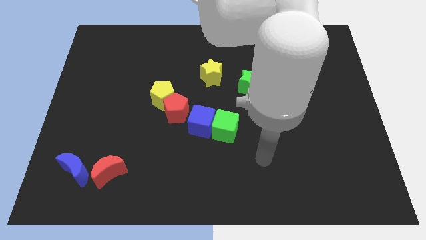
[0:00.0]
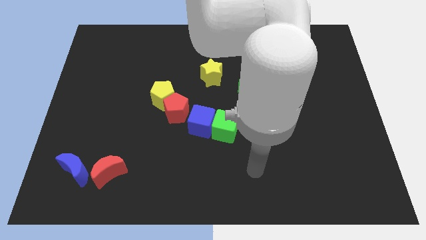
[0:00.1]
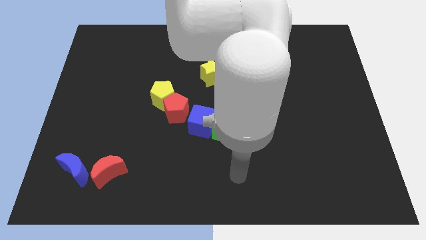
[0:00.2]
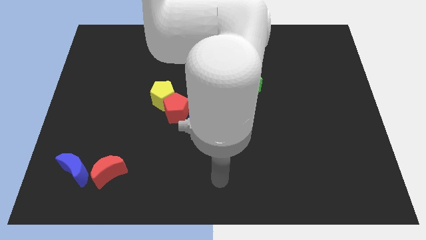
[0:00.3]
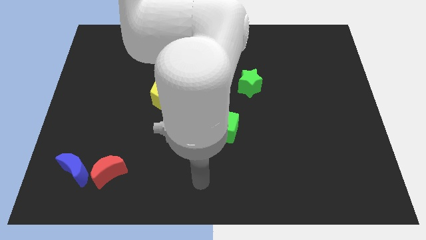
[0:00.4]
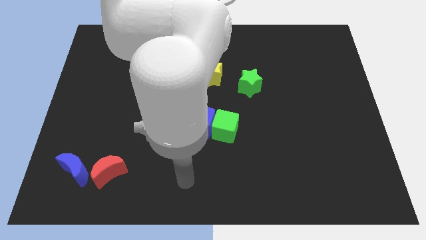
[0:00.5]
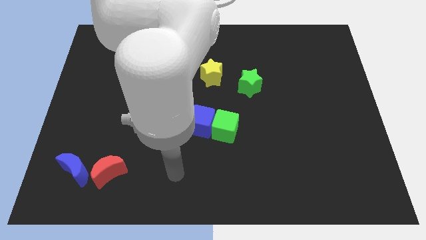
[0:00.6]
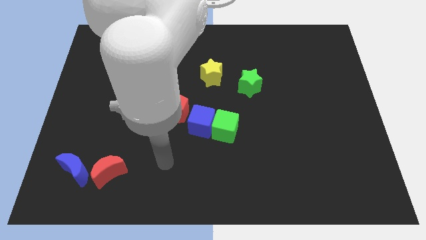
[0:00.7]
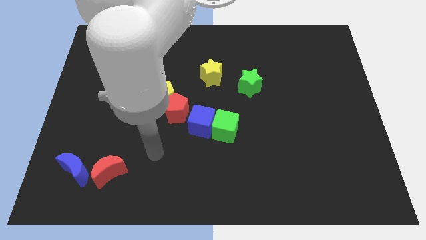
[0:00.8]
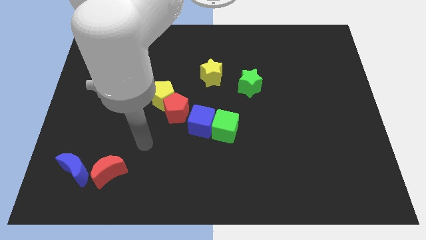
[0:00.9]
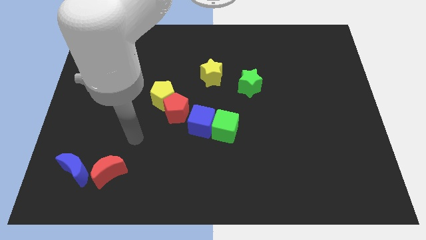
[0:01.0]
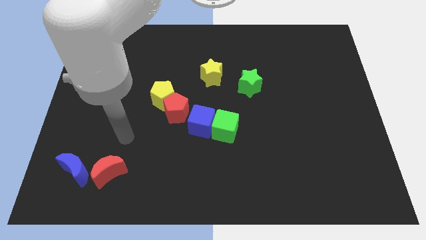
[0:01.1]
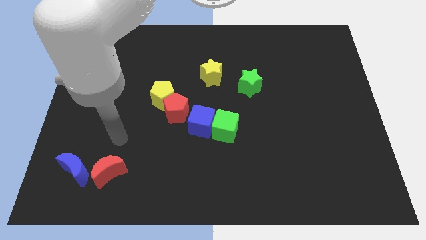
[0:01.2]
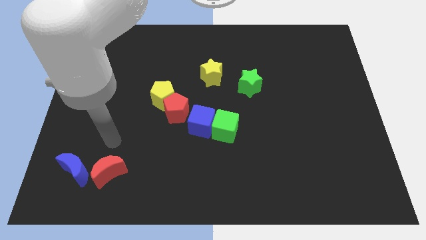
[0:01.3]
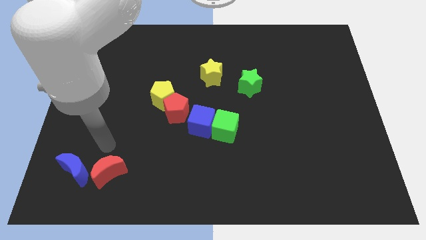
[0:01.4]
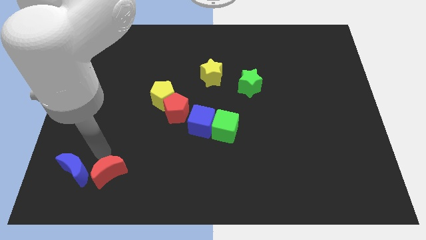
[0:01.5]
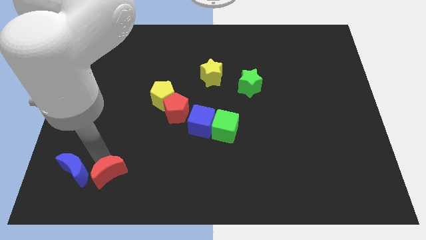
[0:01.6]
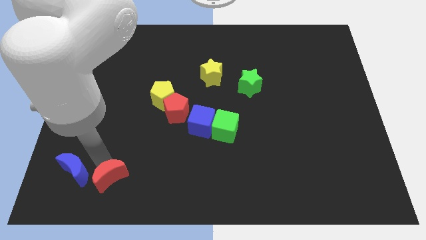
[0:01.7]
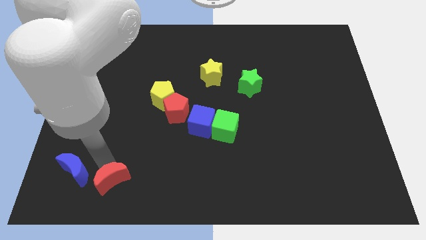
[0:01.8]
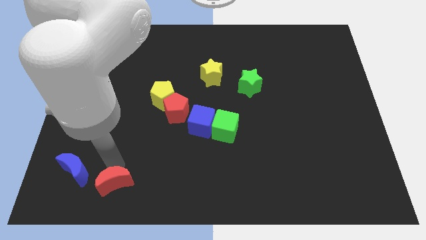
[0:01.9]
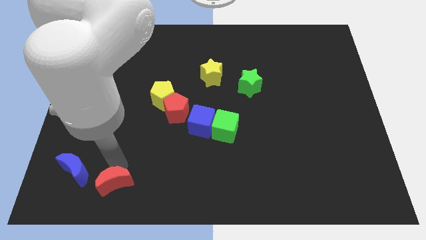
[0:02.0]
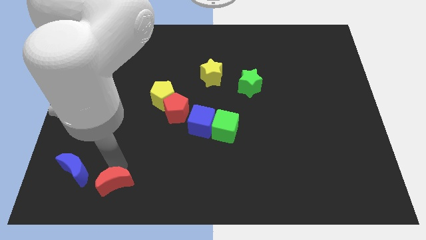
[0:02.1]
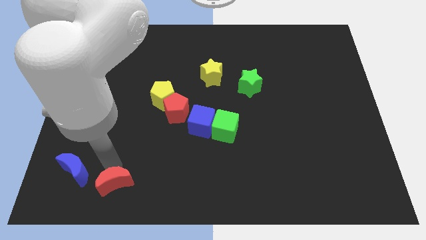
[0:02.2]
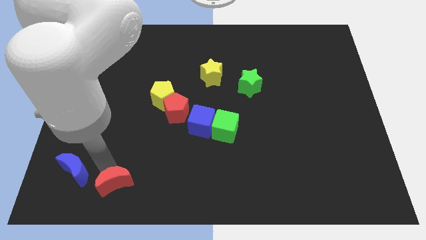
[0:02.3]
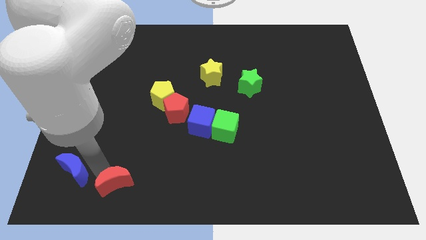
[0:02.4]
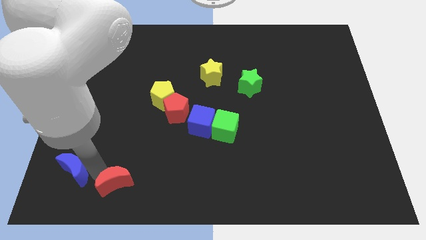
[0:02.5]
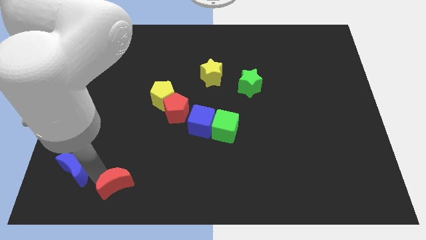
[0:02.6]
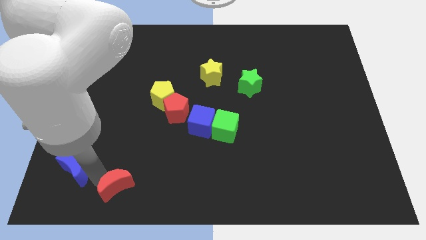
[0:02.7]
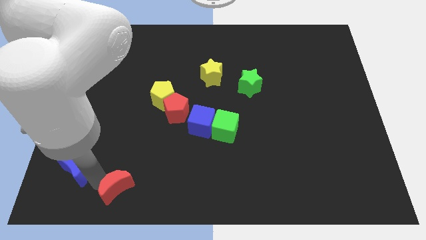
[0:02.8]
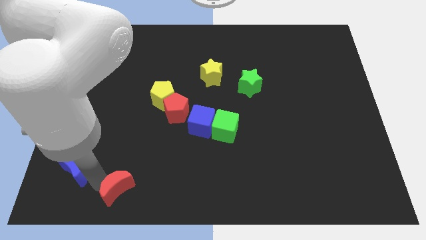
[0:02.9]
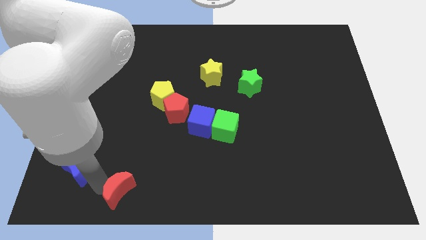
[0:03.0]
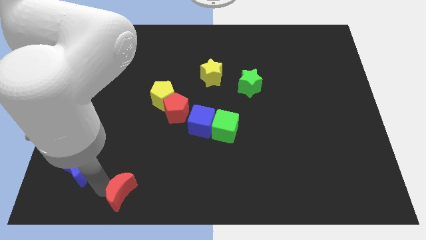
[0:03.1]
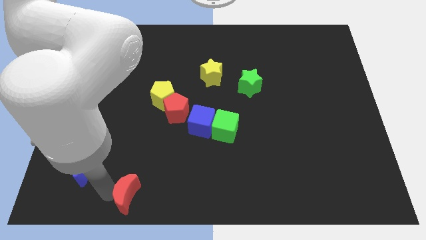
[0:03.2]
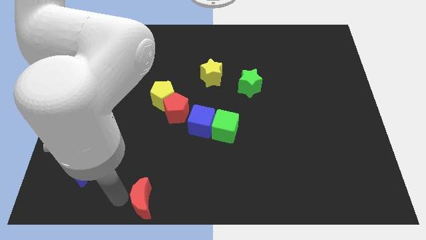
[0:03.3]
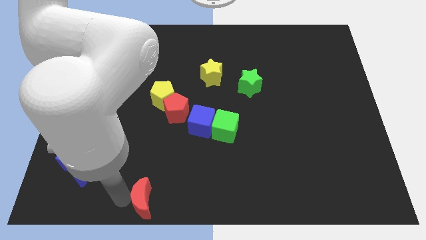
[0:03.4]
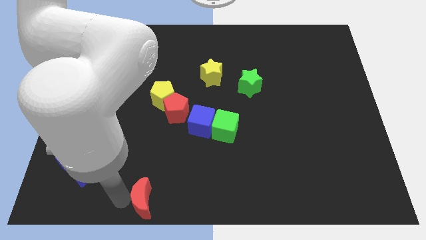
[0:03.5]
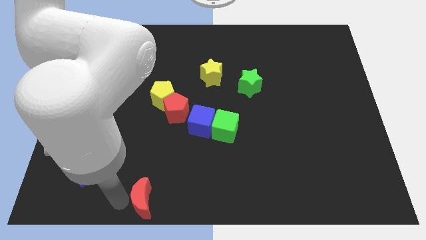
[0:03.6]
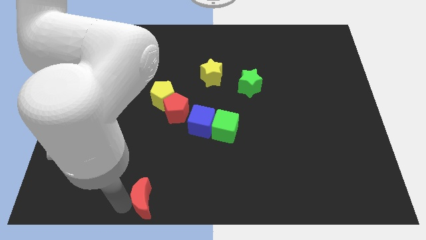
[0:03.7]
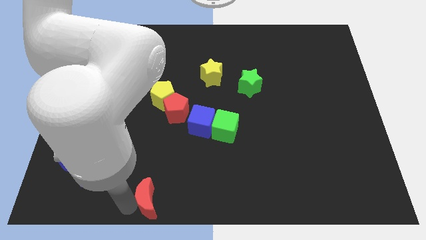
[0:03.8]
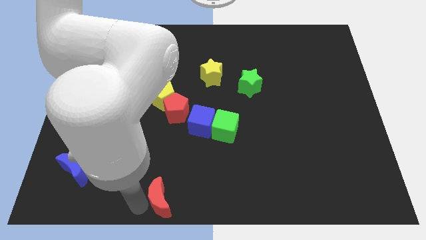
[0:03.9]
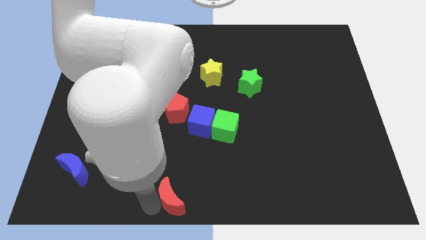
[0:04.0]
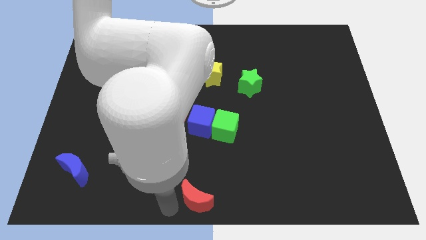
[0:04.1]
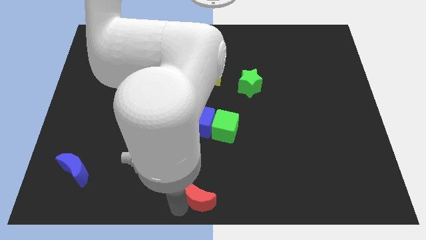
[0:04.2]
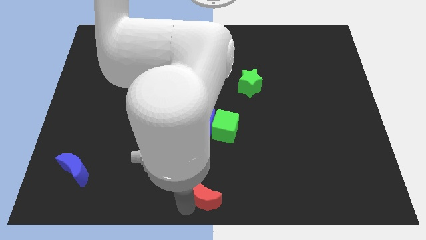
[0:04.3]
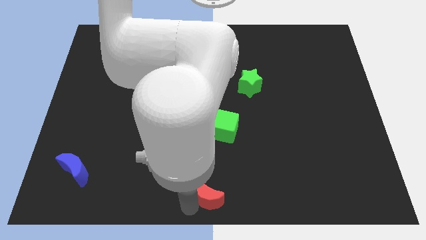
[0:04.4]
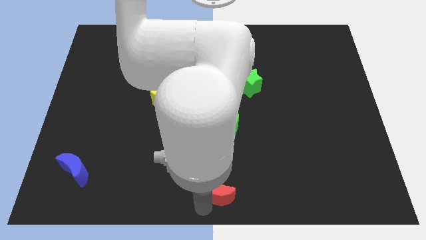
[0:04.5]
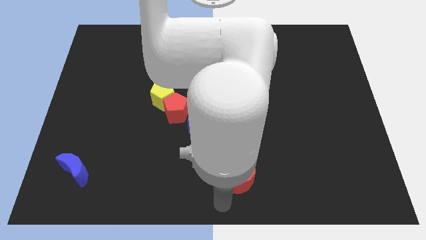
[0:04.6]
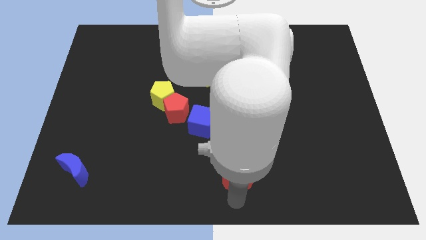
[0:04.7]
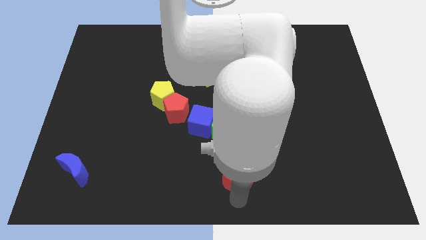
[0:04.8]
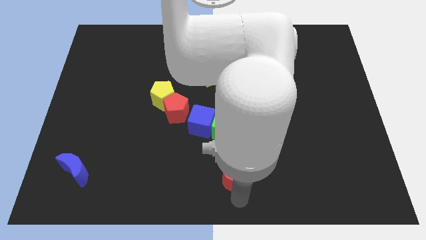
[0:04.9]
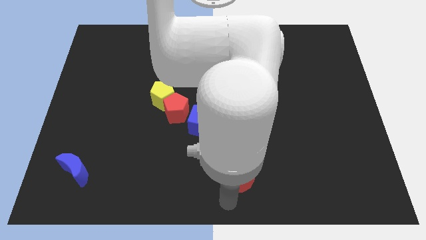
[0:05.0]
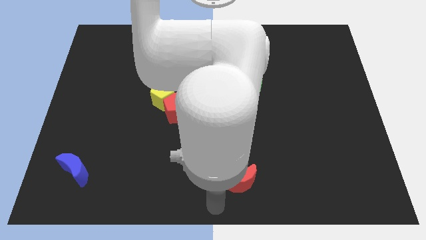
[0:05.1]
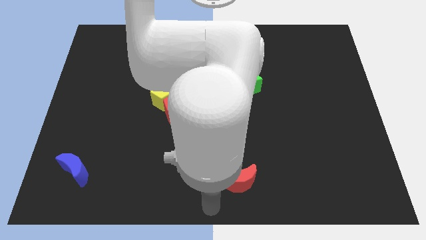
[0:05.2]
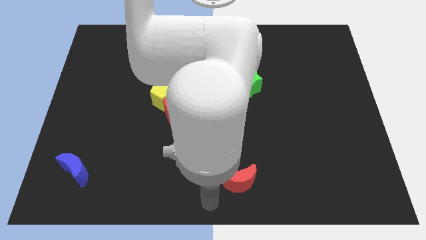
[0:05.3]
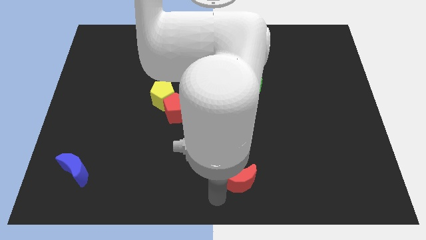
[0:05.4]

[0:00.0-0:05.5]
separate the red moon from the blue moon

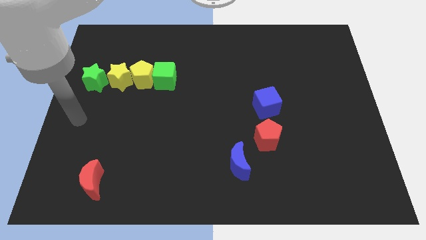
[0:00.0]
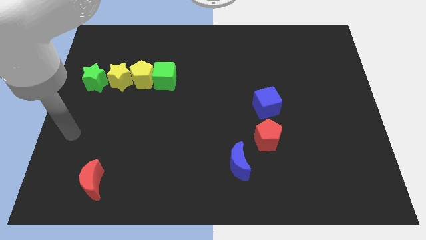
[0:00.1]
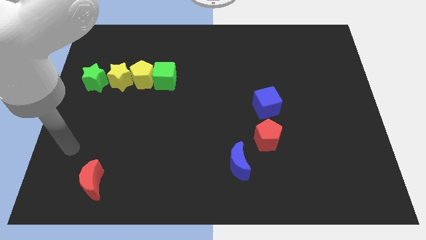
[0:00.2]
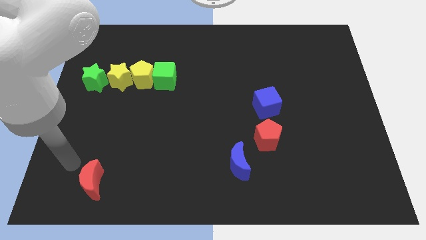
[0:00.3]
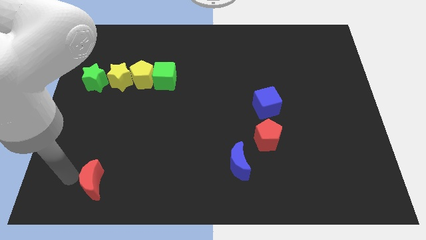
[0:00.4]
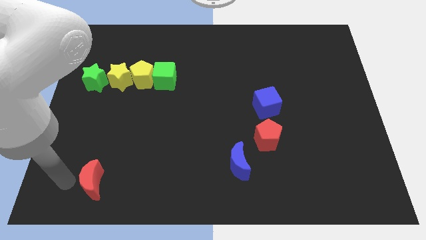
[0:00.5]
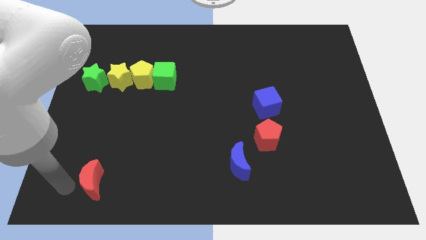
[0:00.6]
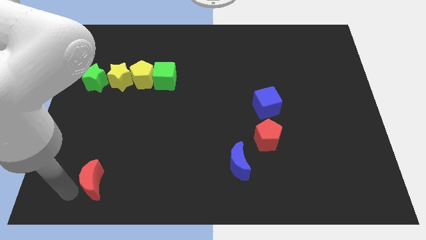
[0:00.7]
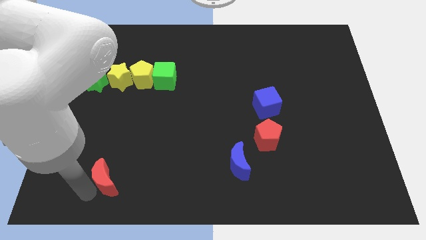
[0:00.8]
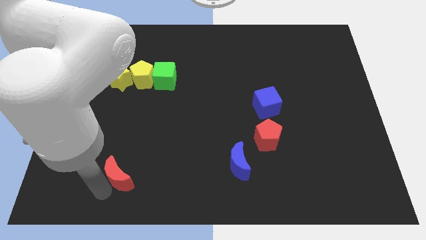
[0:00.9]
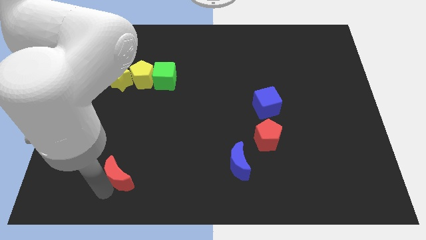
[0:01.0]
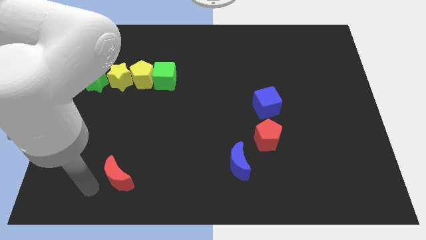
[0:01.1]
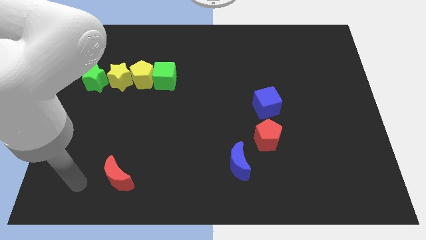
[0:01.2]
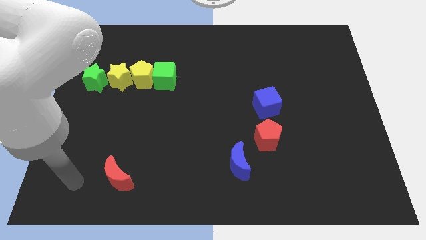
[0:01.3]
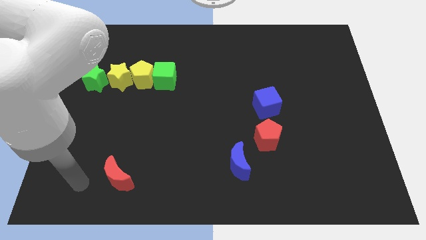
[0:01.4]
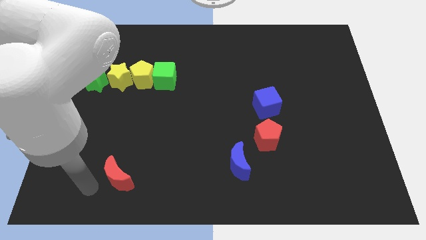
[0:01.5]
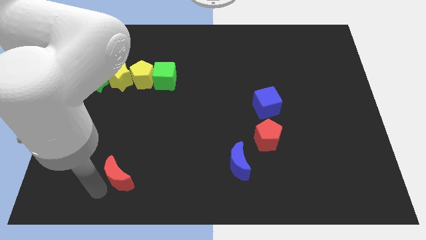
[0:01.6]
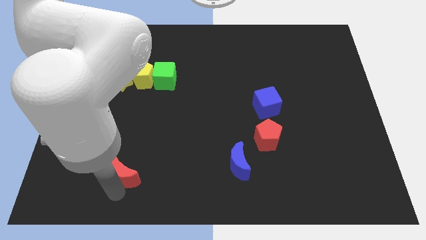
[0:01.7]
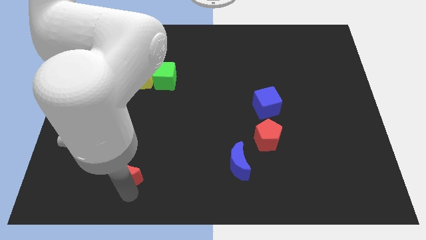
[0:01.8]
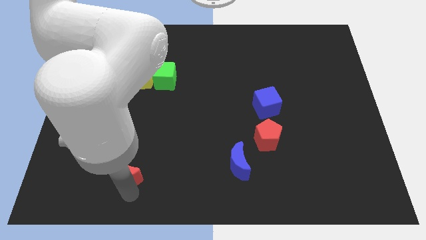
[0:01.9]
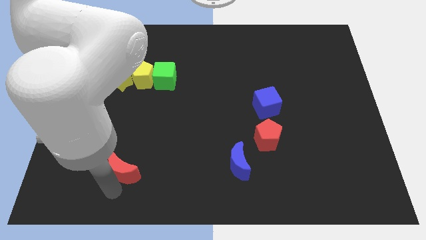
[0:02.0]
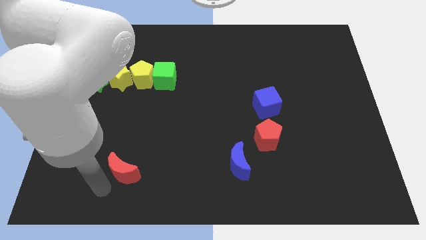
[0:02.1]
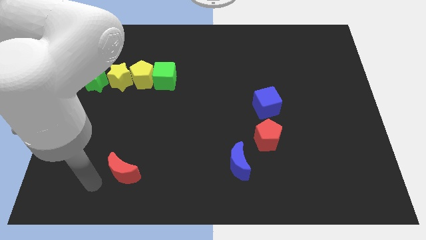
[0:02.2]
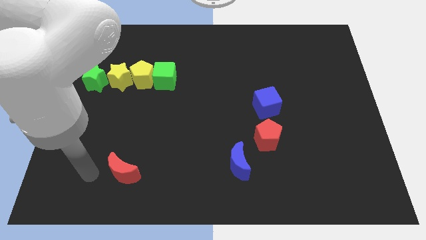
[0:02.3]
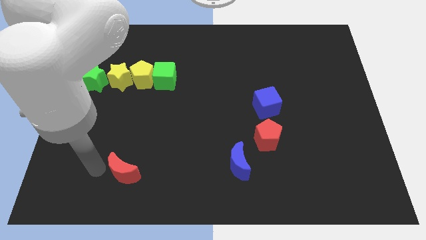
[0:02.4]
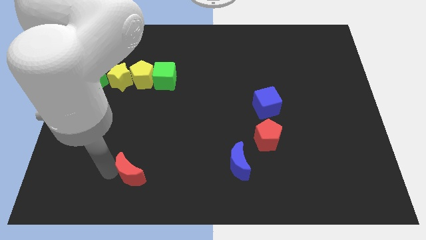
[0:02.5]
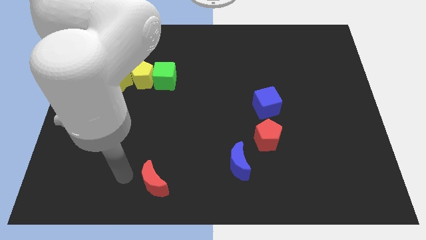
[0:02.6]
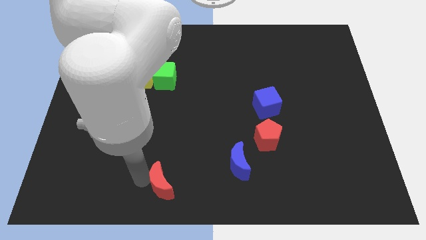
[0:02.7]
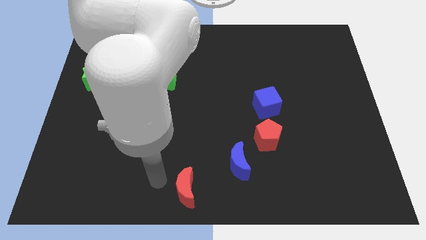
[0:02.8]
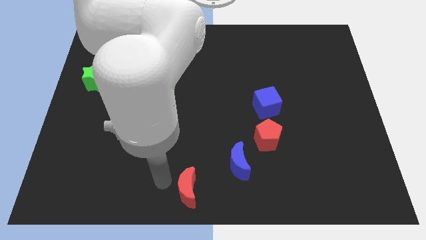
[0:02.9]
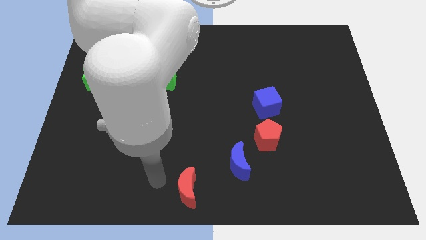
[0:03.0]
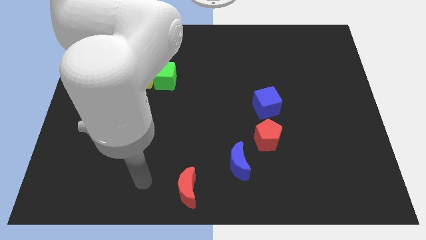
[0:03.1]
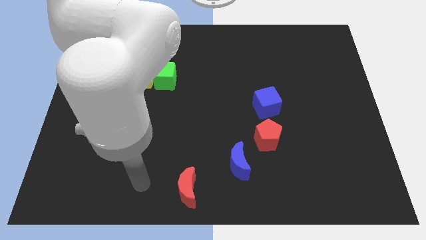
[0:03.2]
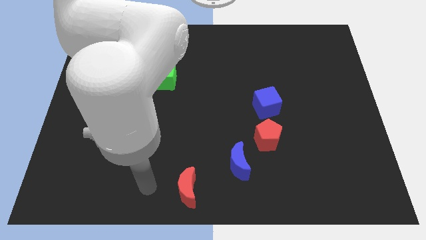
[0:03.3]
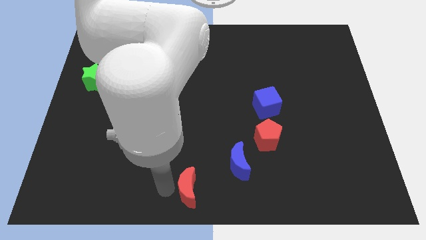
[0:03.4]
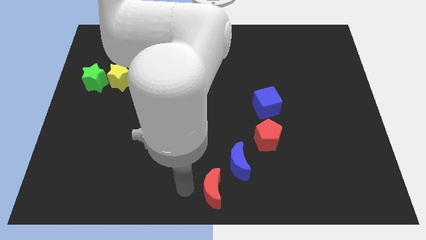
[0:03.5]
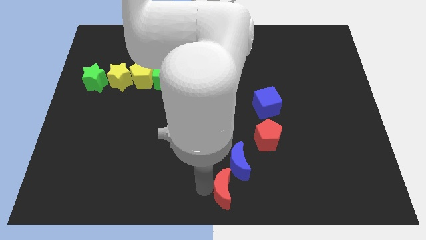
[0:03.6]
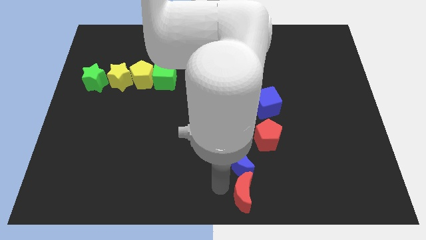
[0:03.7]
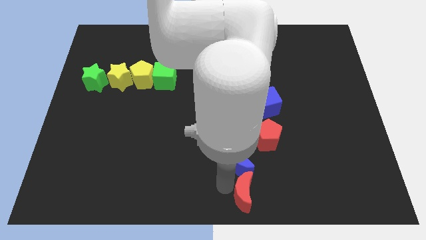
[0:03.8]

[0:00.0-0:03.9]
slide the red moon to the right side
